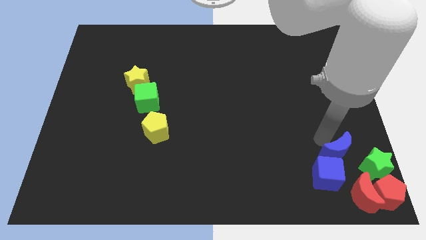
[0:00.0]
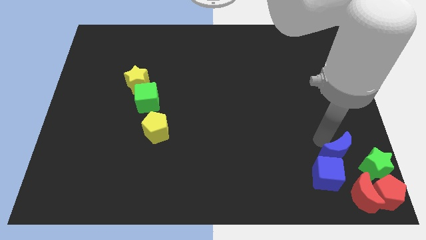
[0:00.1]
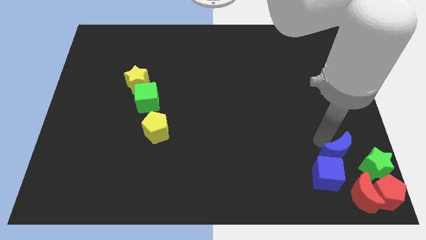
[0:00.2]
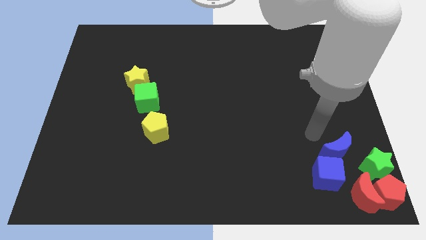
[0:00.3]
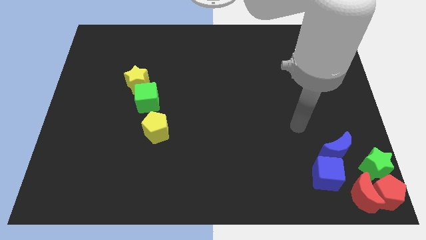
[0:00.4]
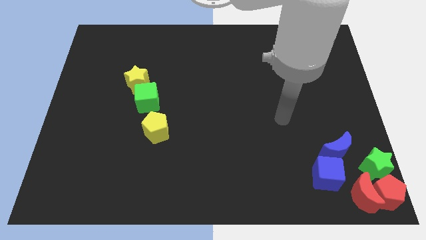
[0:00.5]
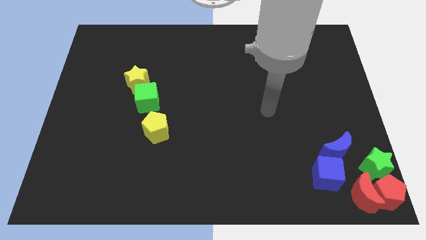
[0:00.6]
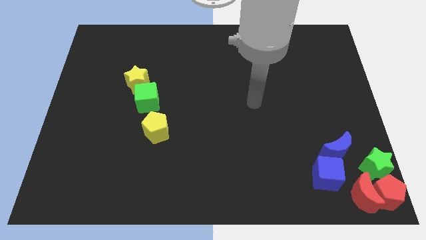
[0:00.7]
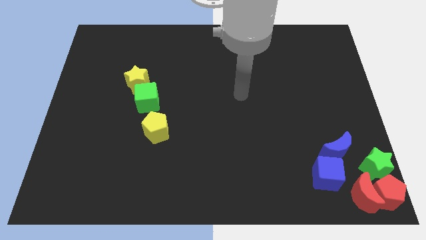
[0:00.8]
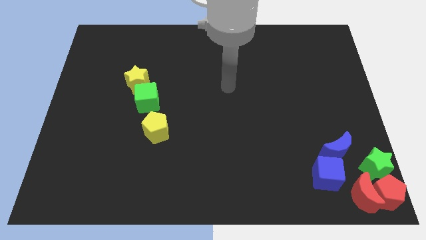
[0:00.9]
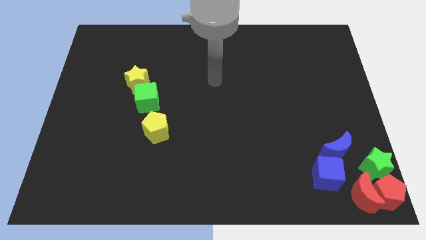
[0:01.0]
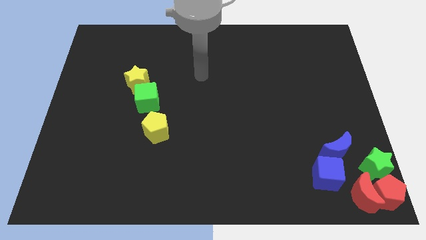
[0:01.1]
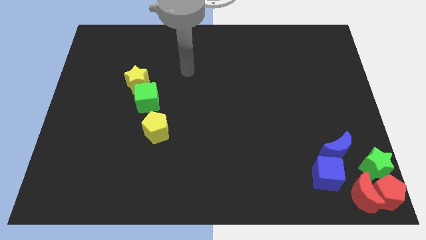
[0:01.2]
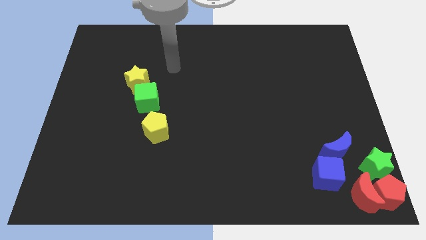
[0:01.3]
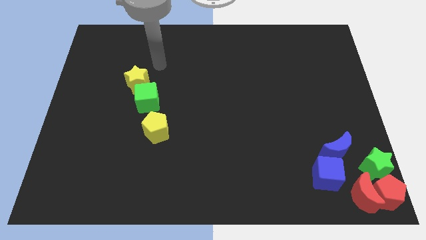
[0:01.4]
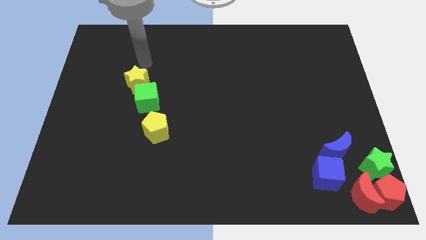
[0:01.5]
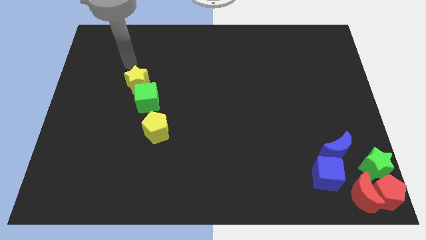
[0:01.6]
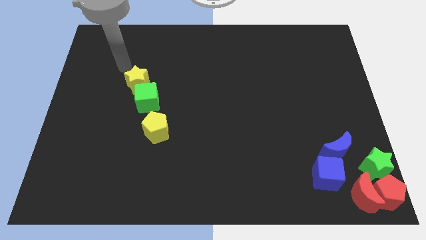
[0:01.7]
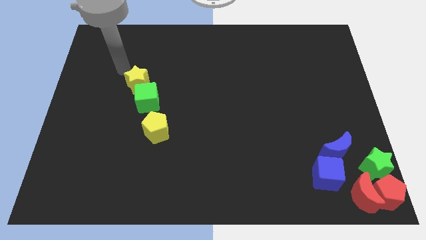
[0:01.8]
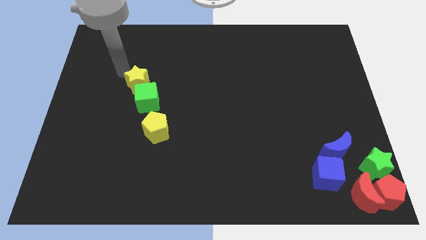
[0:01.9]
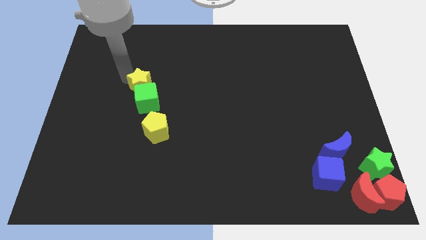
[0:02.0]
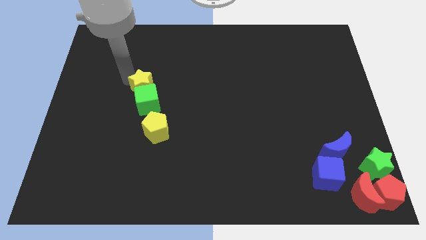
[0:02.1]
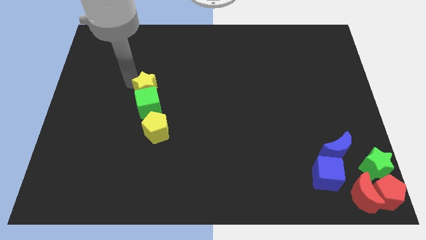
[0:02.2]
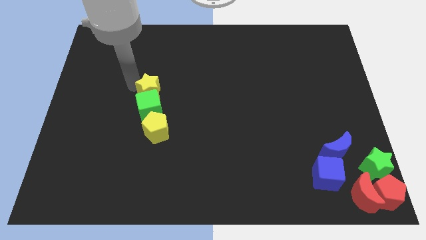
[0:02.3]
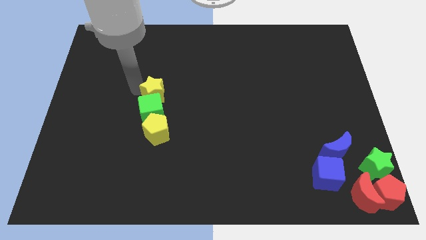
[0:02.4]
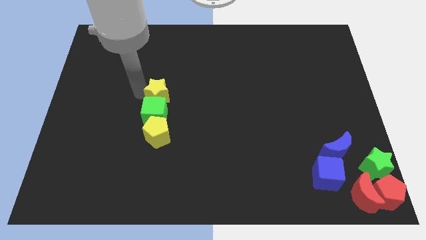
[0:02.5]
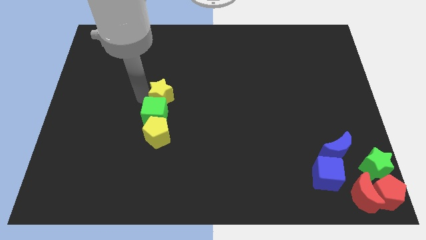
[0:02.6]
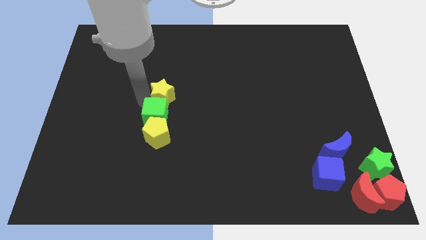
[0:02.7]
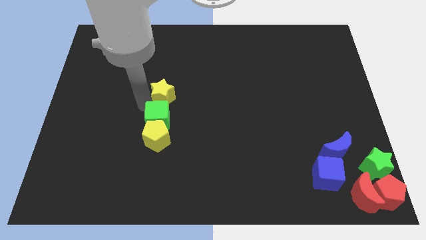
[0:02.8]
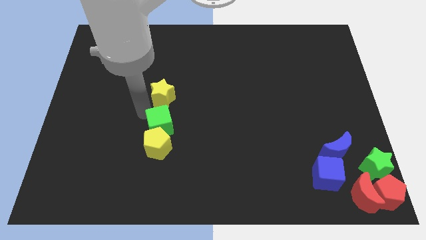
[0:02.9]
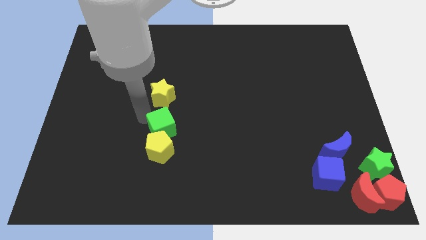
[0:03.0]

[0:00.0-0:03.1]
arrange a vertical of blocks at the left side of the table

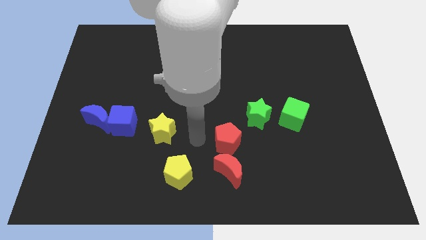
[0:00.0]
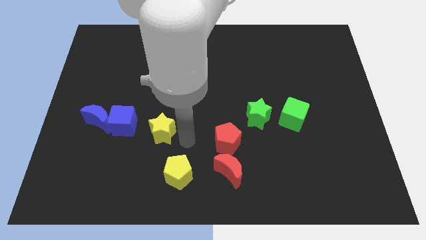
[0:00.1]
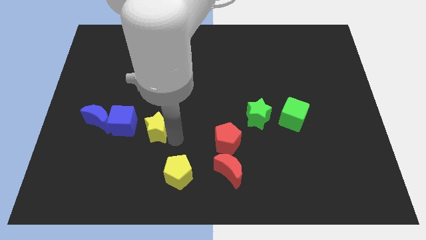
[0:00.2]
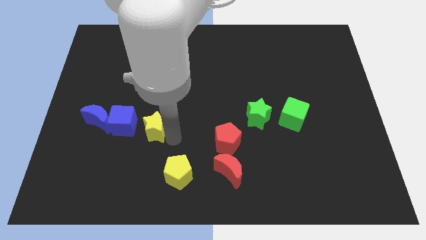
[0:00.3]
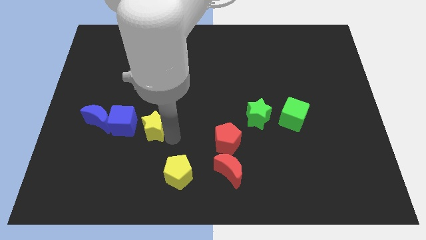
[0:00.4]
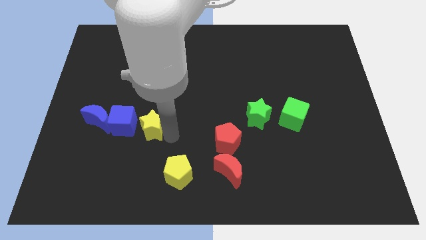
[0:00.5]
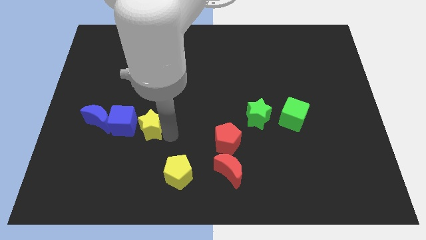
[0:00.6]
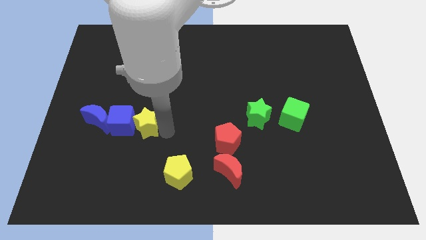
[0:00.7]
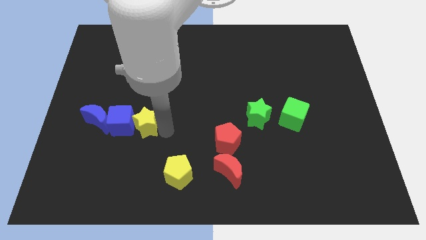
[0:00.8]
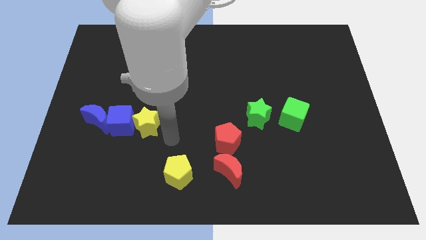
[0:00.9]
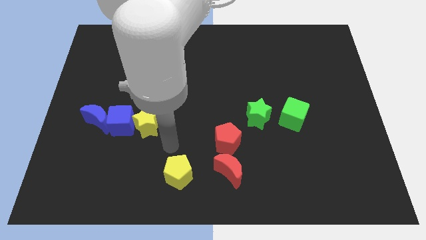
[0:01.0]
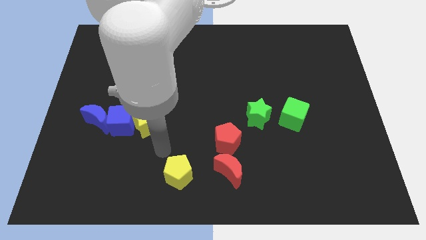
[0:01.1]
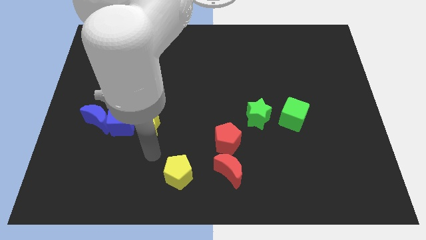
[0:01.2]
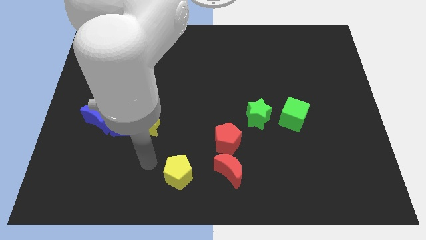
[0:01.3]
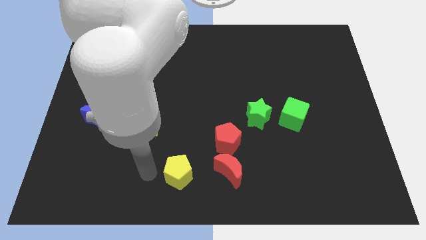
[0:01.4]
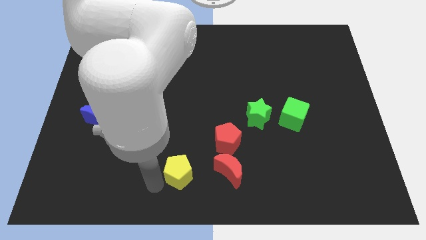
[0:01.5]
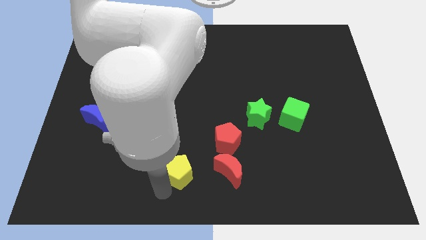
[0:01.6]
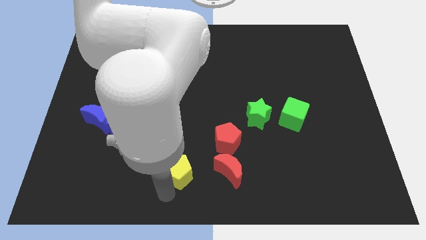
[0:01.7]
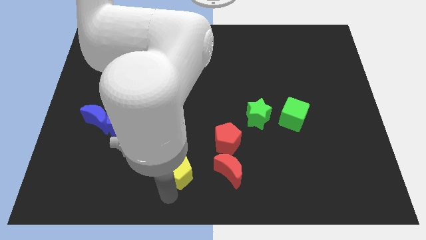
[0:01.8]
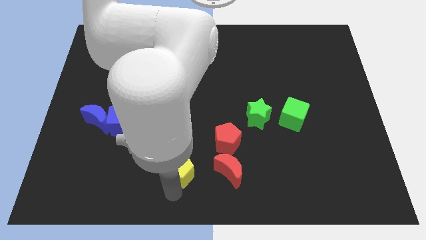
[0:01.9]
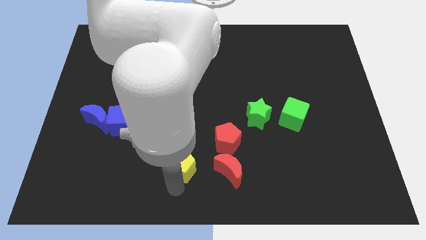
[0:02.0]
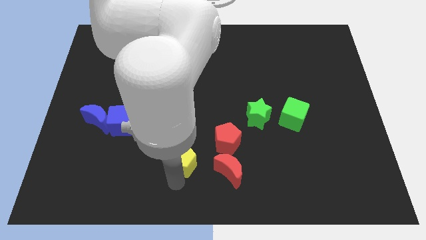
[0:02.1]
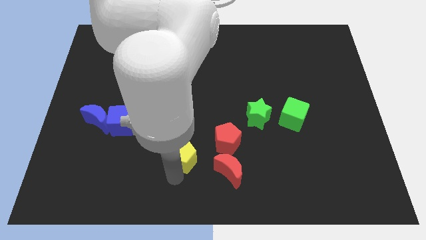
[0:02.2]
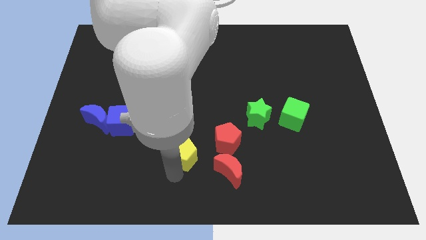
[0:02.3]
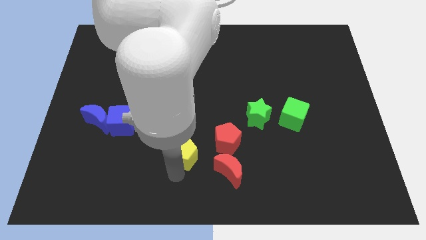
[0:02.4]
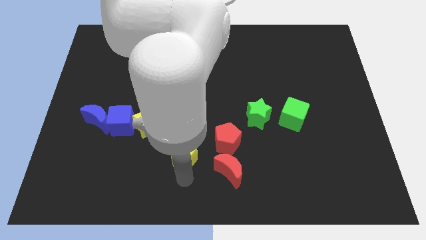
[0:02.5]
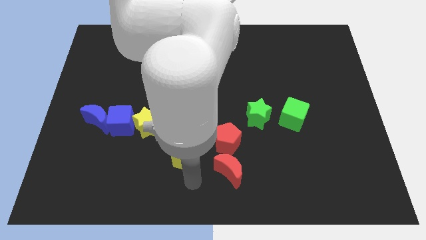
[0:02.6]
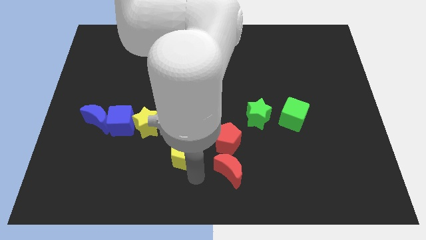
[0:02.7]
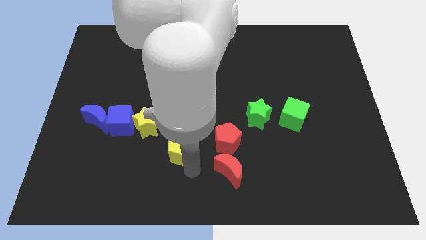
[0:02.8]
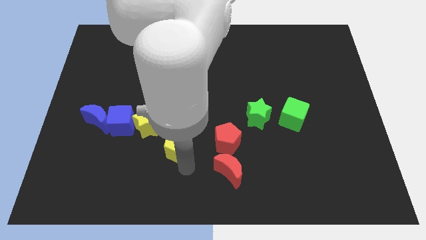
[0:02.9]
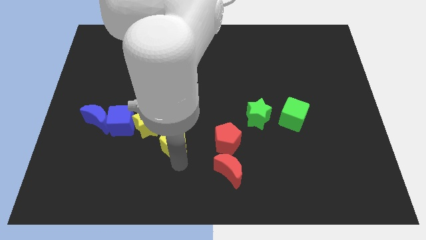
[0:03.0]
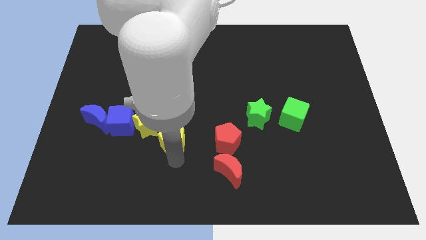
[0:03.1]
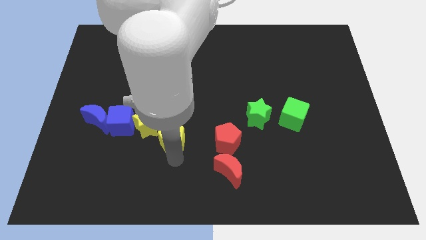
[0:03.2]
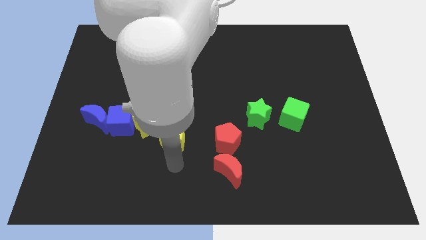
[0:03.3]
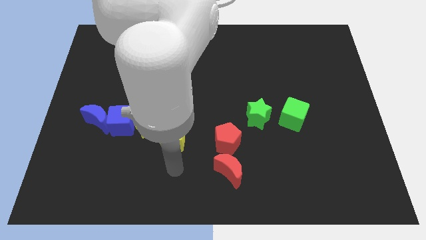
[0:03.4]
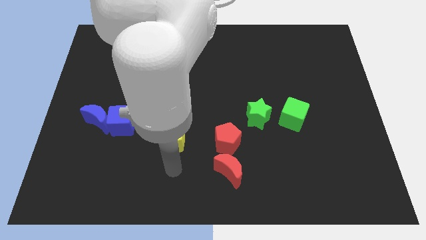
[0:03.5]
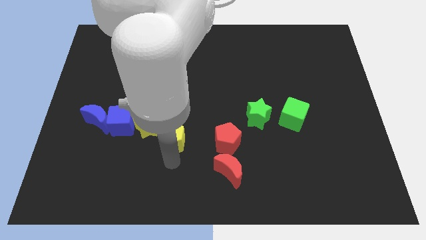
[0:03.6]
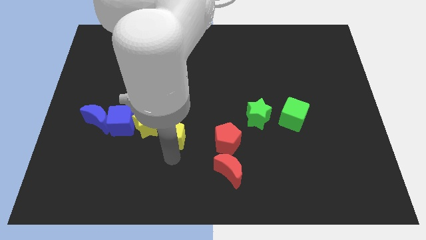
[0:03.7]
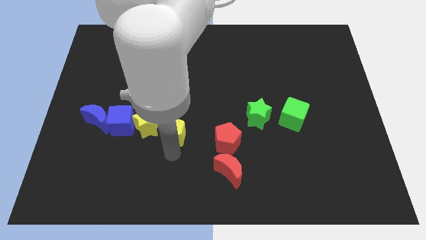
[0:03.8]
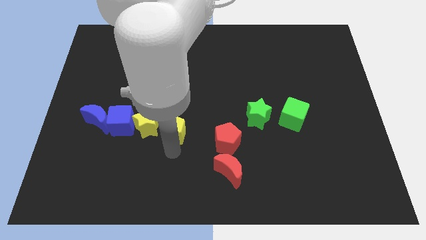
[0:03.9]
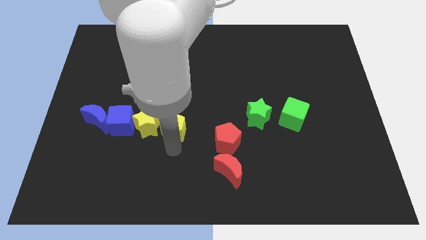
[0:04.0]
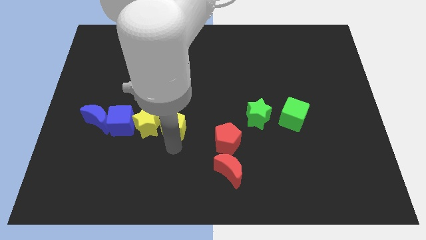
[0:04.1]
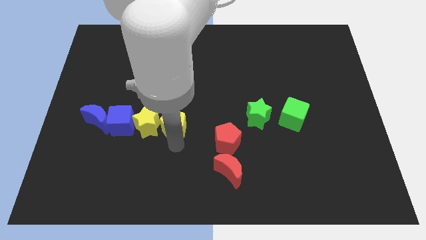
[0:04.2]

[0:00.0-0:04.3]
place the yellow pentagon to the right of the yellow star

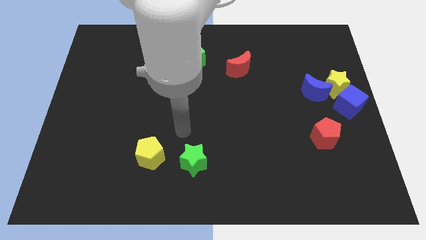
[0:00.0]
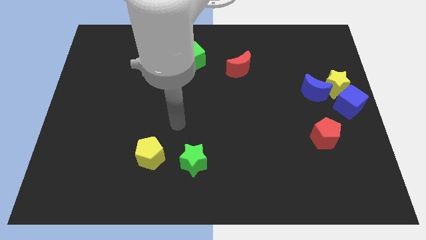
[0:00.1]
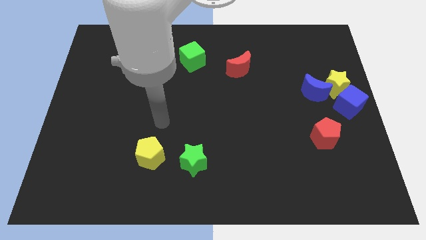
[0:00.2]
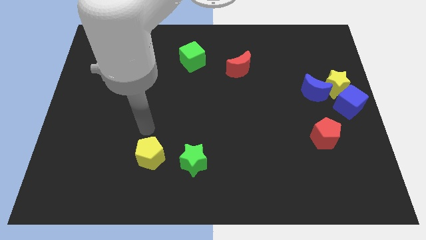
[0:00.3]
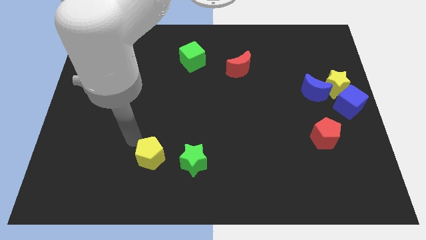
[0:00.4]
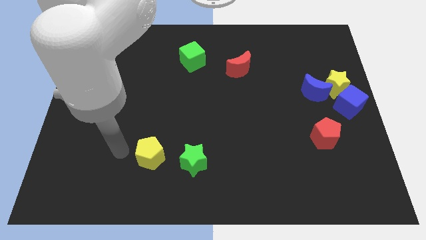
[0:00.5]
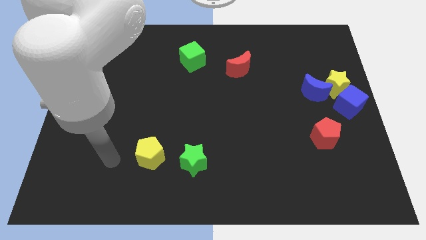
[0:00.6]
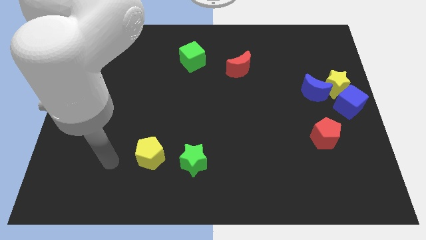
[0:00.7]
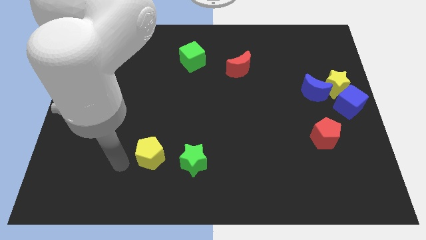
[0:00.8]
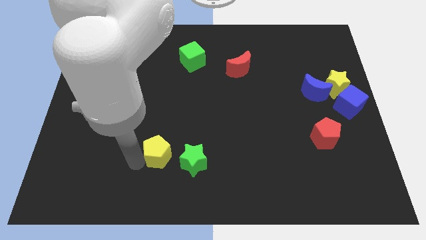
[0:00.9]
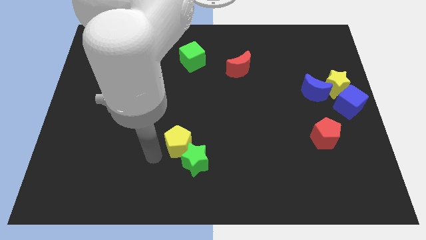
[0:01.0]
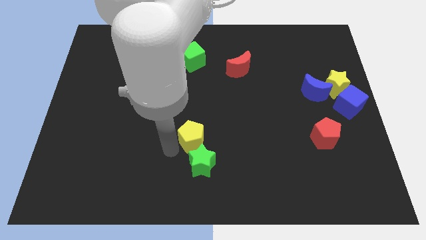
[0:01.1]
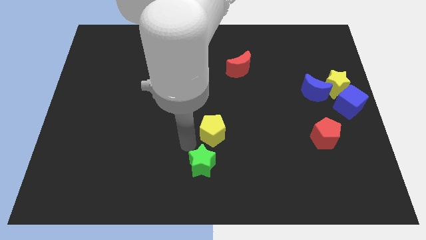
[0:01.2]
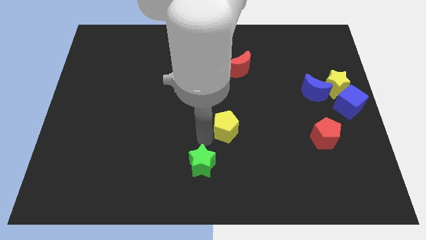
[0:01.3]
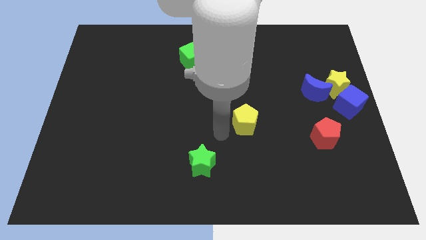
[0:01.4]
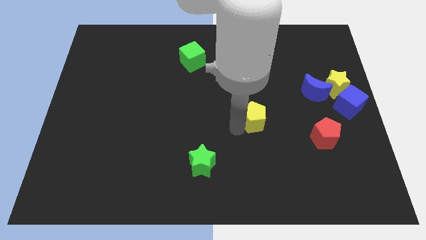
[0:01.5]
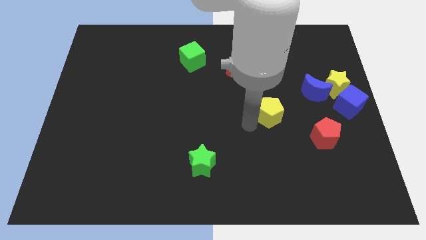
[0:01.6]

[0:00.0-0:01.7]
place the yellow pentagon to the top right diagonal of the green star
